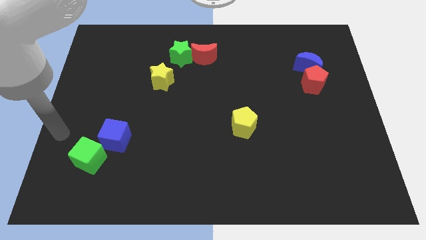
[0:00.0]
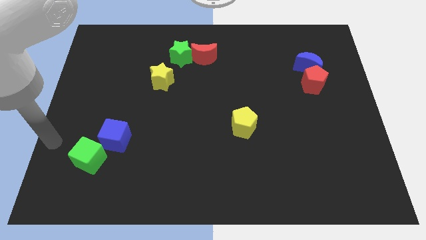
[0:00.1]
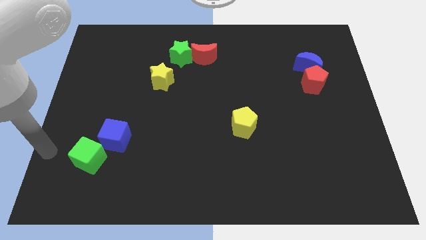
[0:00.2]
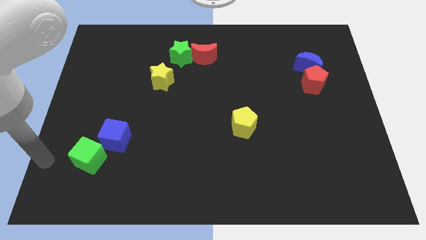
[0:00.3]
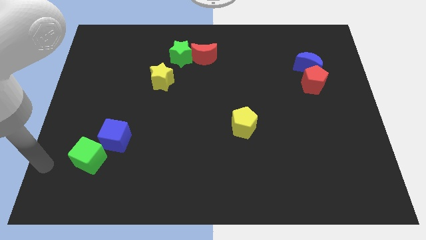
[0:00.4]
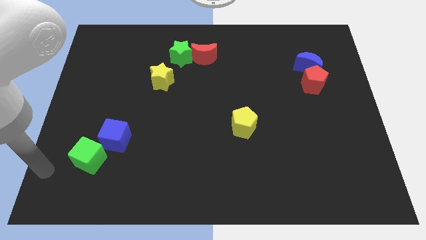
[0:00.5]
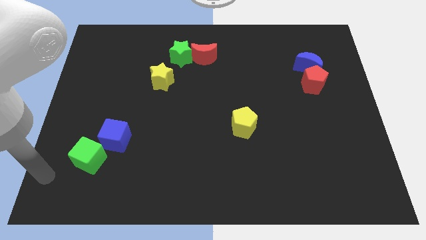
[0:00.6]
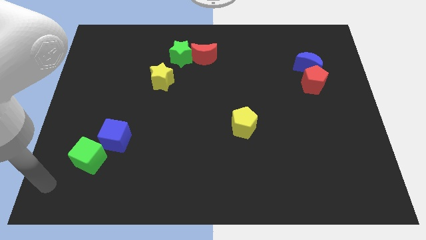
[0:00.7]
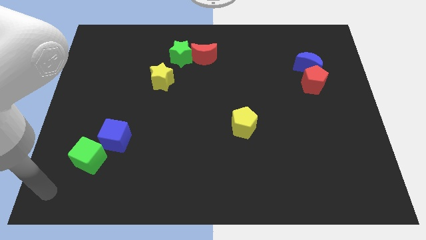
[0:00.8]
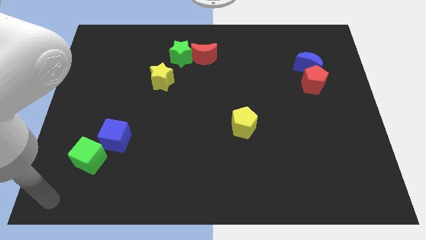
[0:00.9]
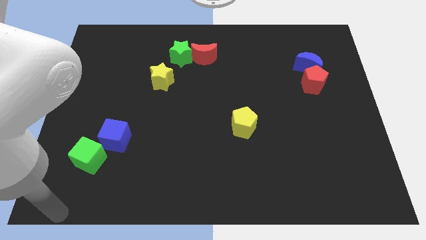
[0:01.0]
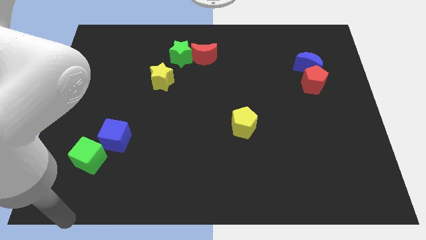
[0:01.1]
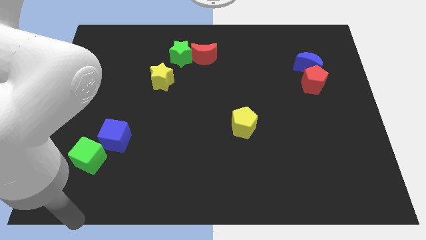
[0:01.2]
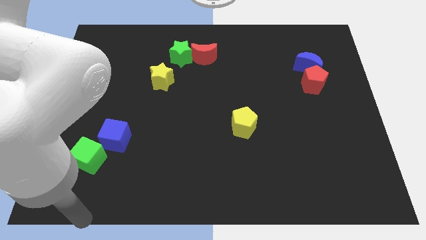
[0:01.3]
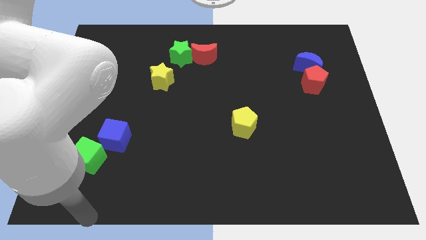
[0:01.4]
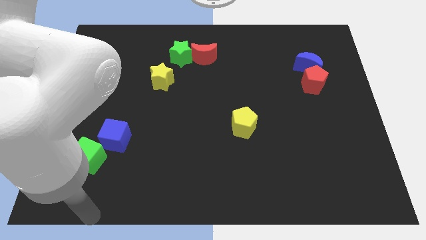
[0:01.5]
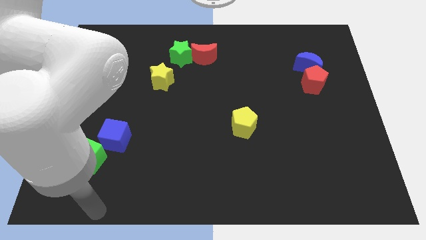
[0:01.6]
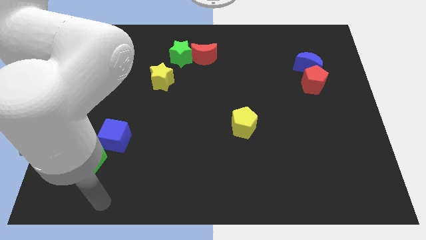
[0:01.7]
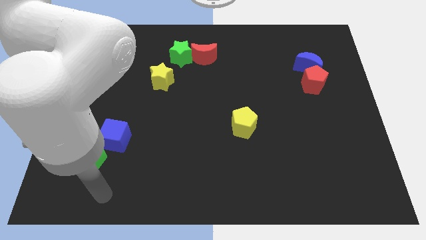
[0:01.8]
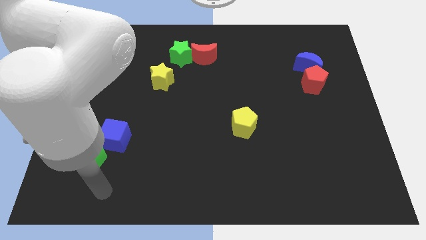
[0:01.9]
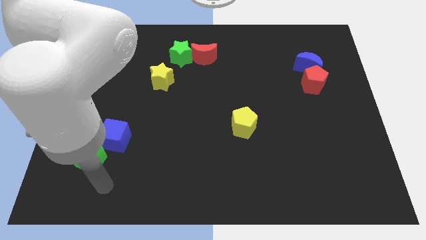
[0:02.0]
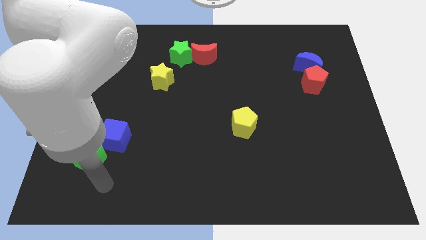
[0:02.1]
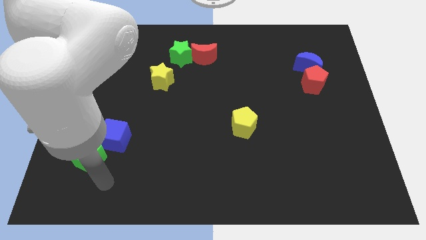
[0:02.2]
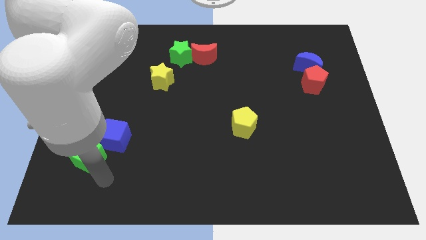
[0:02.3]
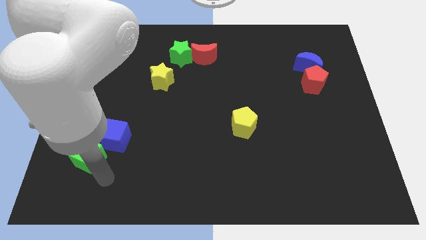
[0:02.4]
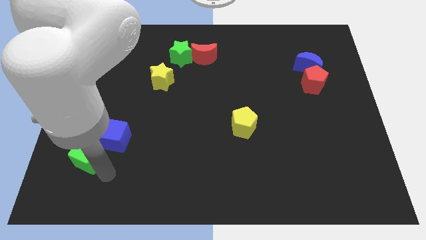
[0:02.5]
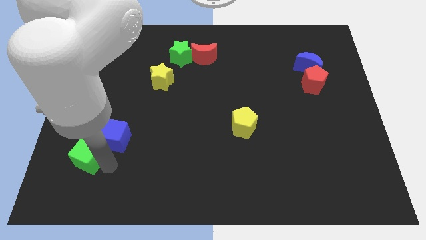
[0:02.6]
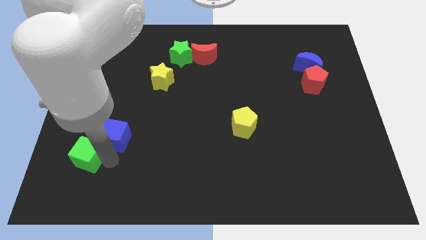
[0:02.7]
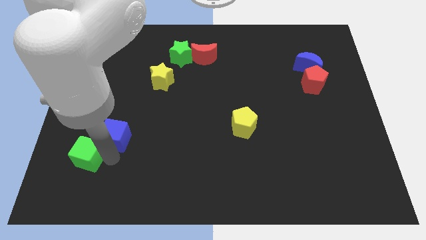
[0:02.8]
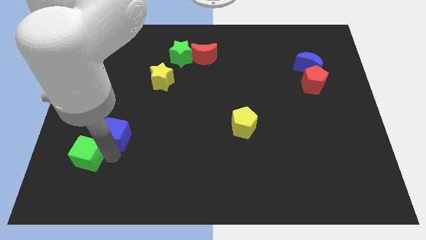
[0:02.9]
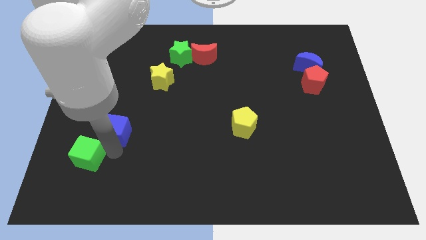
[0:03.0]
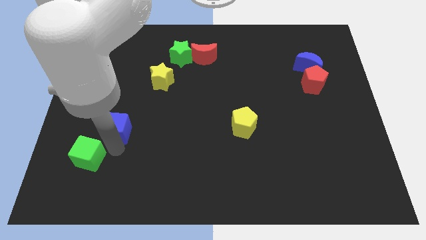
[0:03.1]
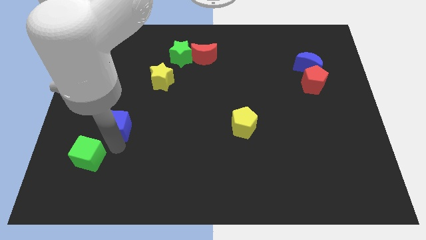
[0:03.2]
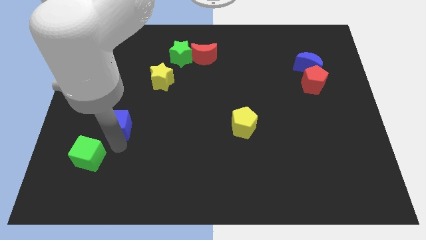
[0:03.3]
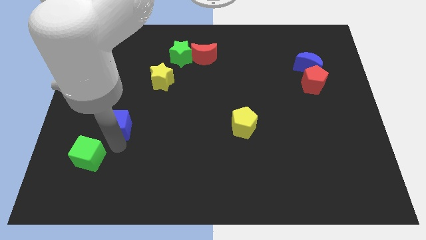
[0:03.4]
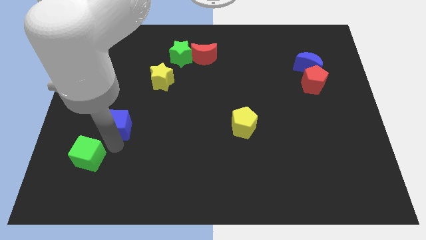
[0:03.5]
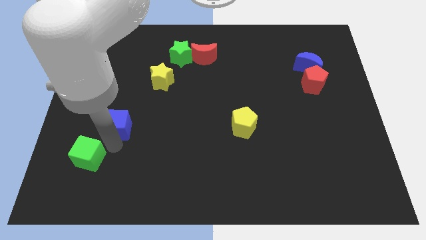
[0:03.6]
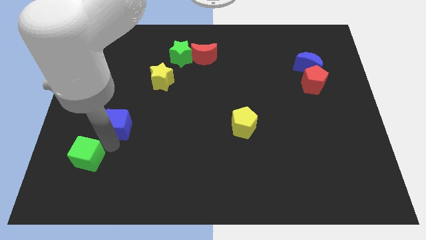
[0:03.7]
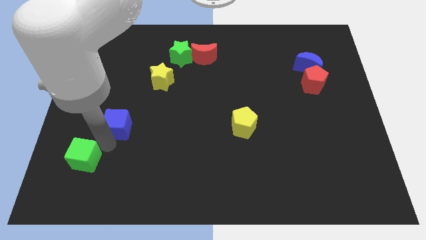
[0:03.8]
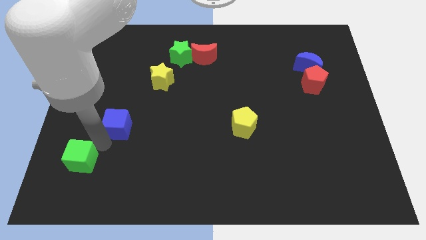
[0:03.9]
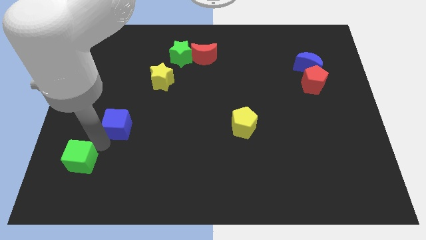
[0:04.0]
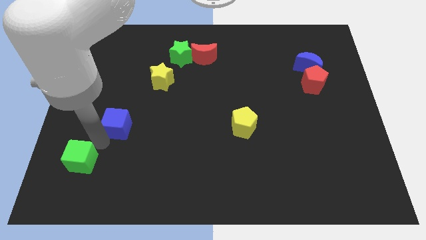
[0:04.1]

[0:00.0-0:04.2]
move the green cube slightly downwards

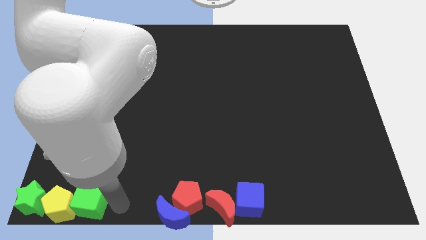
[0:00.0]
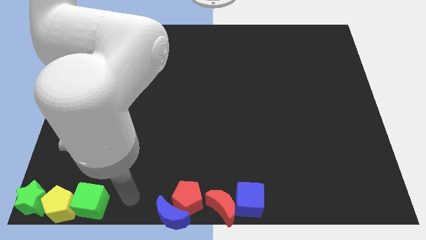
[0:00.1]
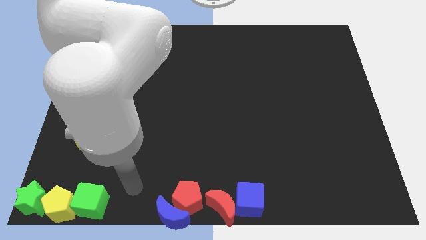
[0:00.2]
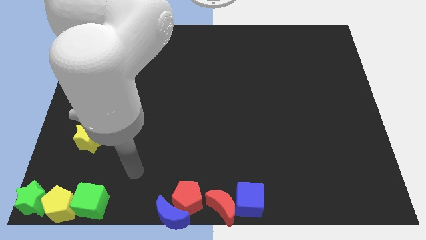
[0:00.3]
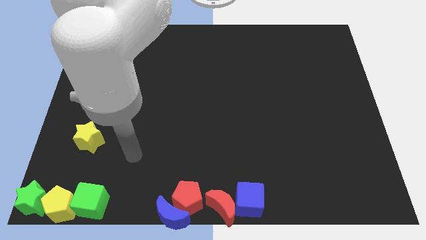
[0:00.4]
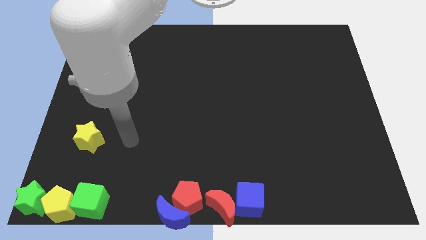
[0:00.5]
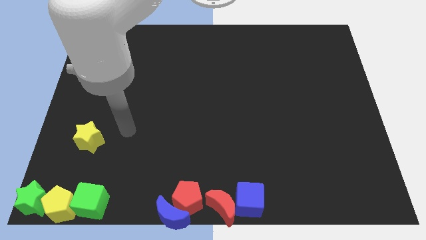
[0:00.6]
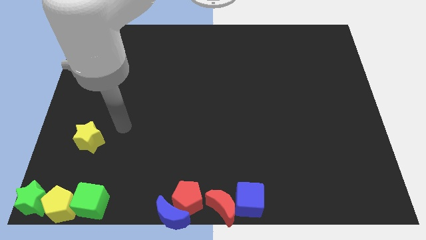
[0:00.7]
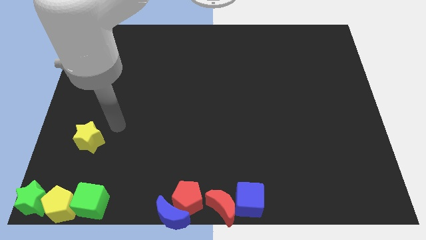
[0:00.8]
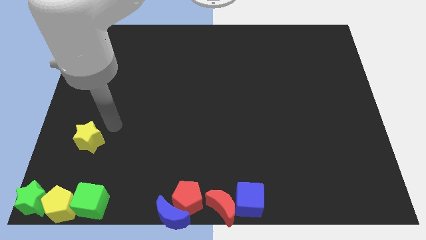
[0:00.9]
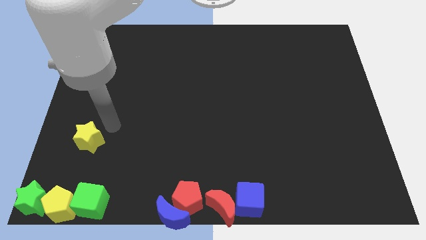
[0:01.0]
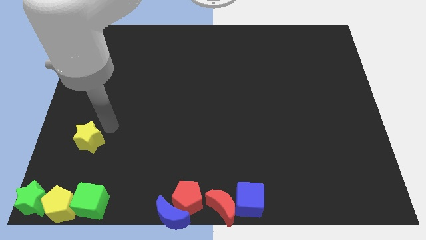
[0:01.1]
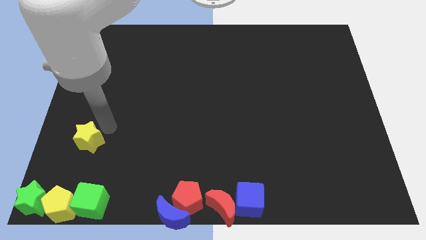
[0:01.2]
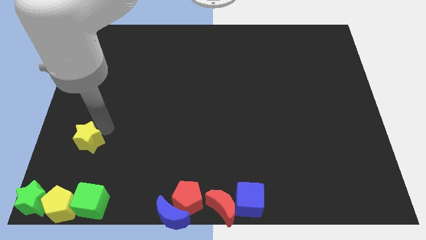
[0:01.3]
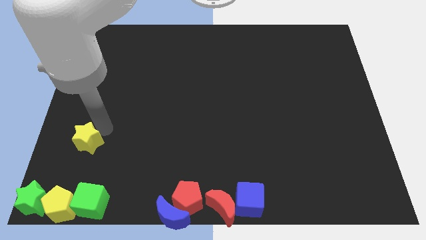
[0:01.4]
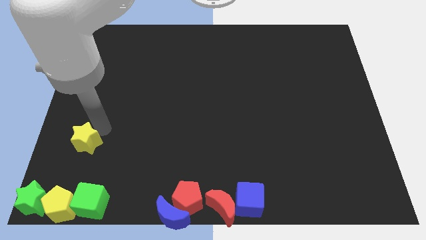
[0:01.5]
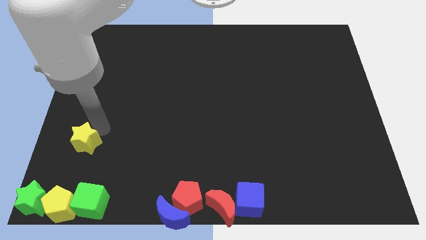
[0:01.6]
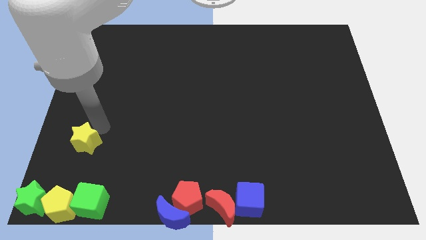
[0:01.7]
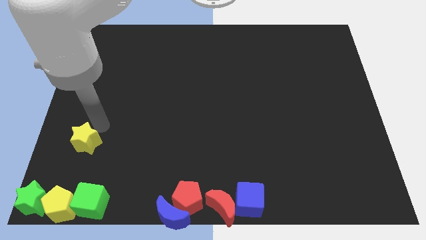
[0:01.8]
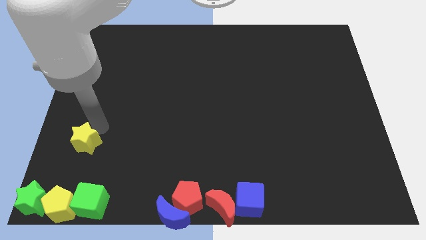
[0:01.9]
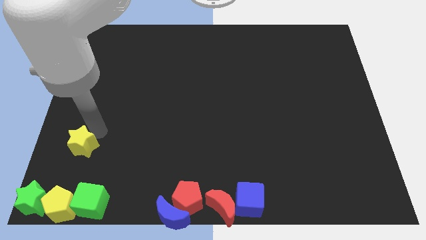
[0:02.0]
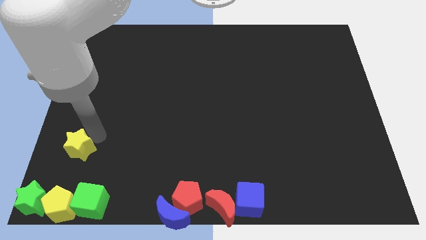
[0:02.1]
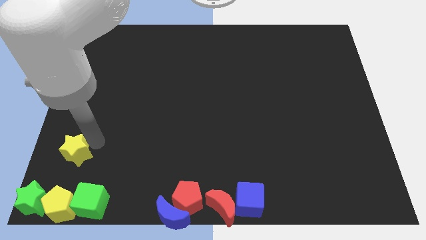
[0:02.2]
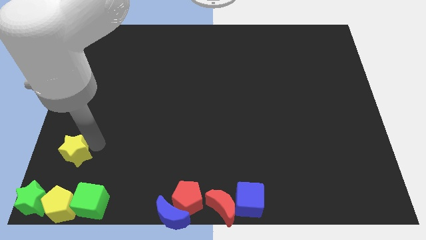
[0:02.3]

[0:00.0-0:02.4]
move your arm away from the green cube

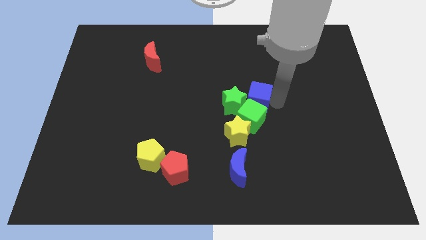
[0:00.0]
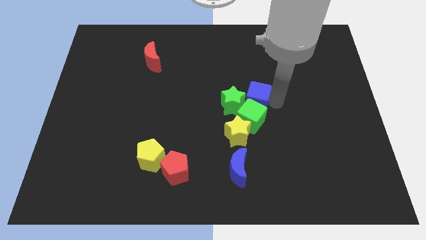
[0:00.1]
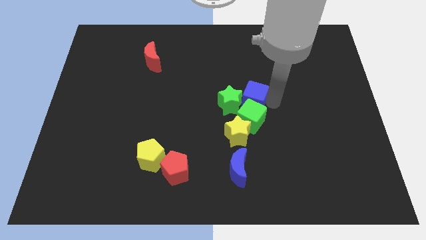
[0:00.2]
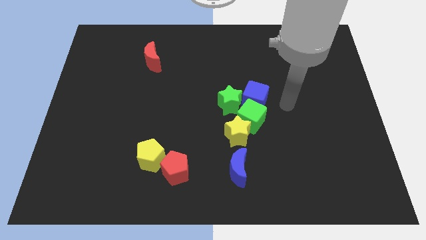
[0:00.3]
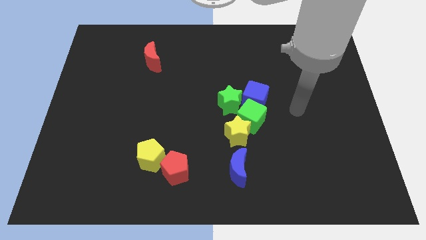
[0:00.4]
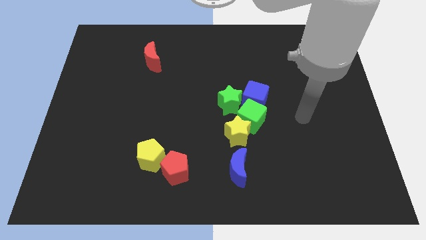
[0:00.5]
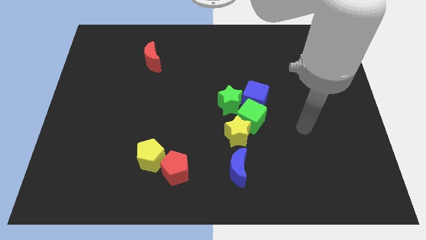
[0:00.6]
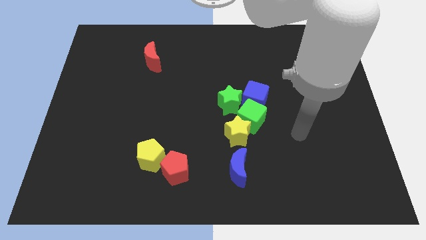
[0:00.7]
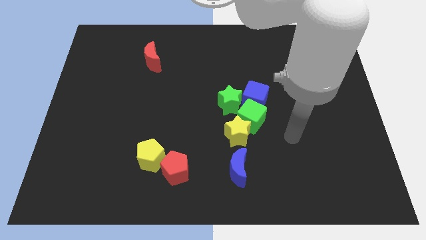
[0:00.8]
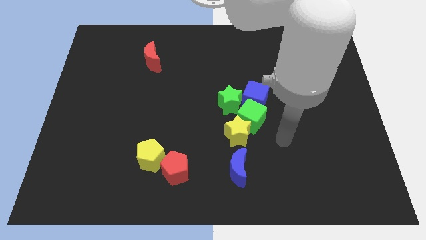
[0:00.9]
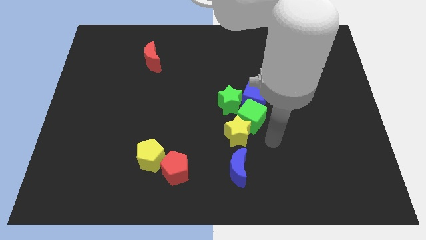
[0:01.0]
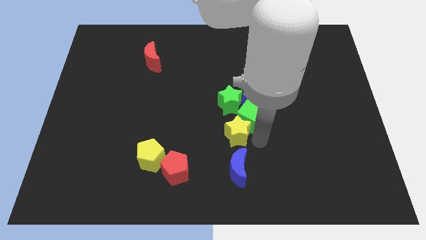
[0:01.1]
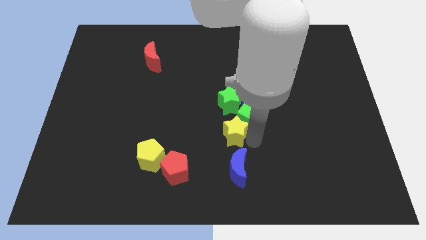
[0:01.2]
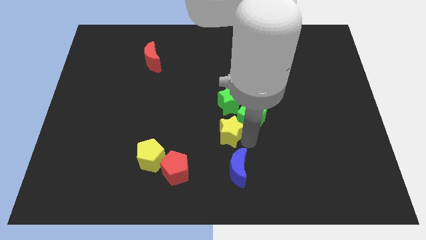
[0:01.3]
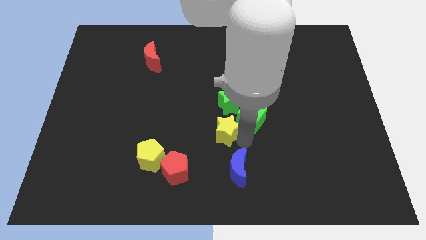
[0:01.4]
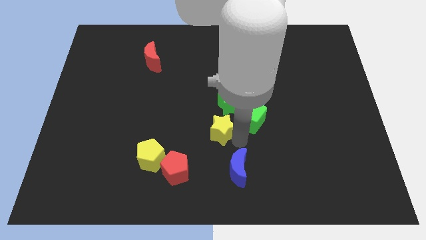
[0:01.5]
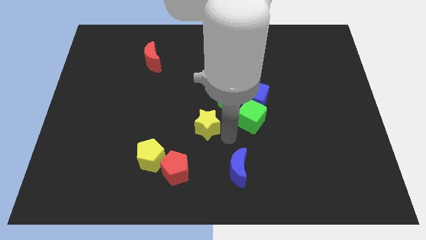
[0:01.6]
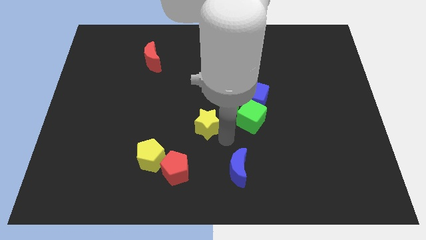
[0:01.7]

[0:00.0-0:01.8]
separate the yellow star from the green cube

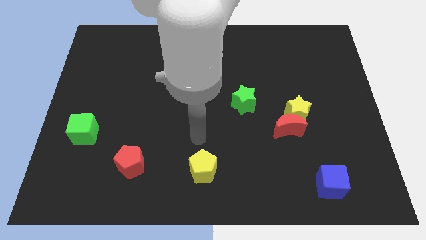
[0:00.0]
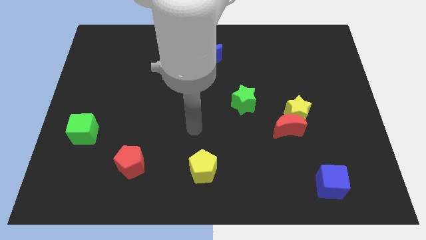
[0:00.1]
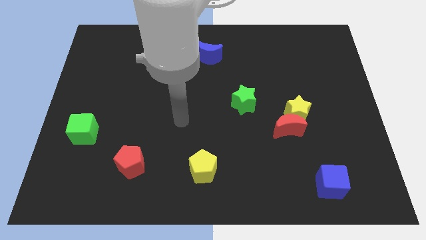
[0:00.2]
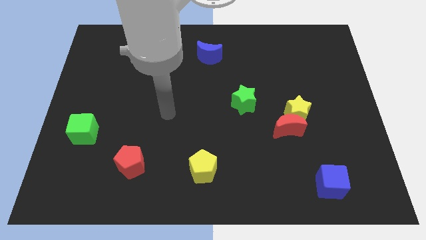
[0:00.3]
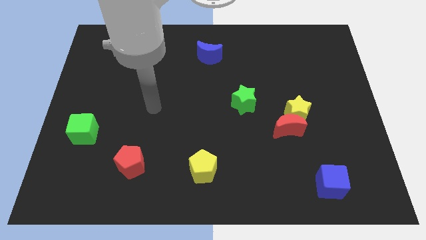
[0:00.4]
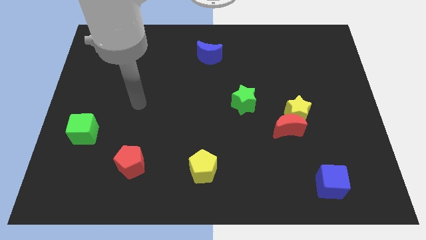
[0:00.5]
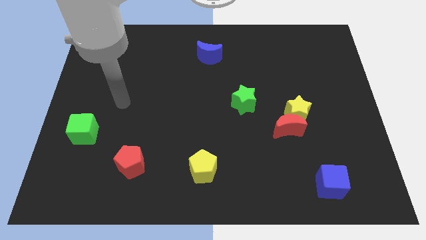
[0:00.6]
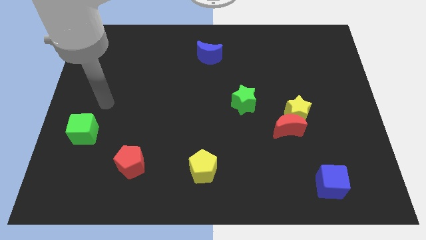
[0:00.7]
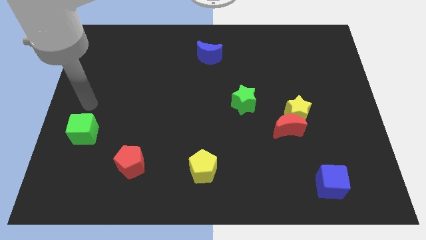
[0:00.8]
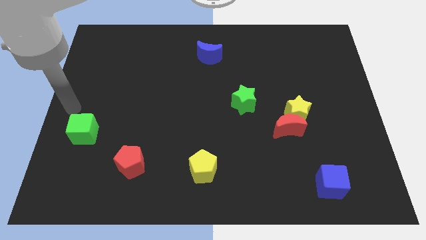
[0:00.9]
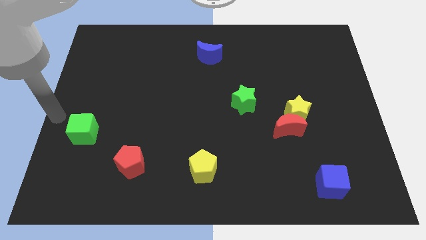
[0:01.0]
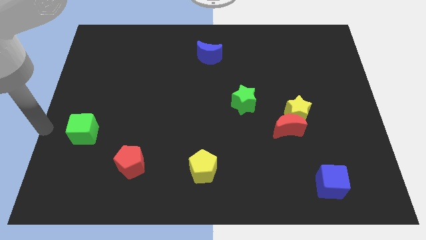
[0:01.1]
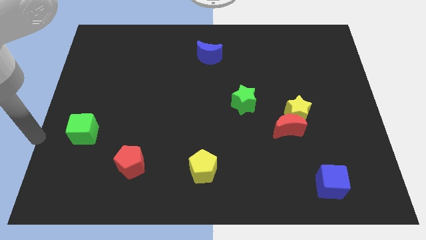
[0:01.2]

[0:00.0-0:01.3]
move your arm near the green cube
